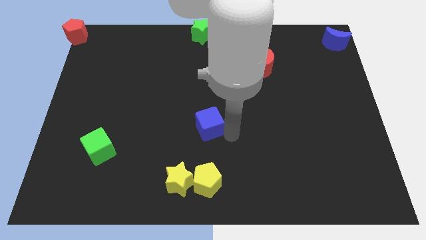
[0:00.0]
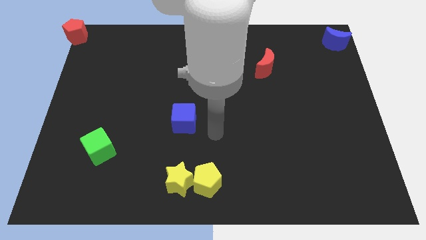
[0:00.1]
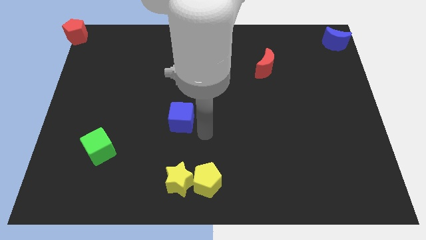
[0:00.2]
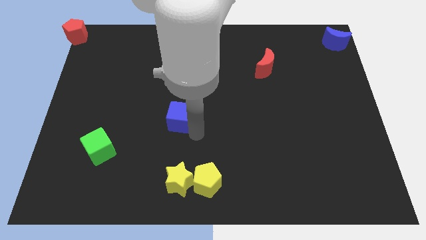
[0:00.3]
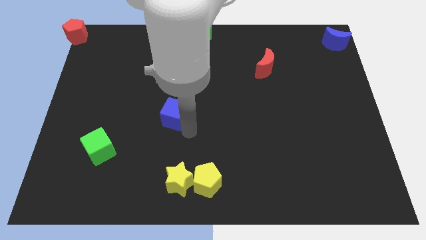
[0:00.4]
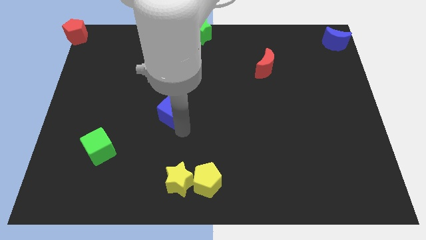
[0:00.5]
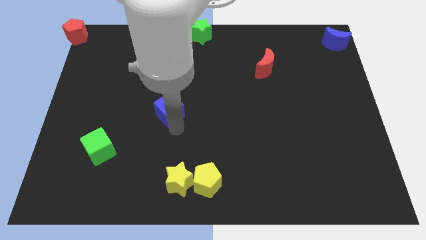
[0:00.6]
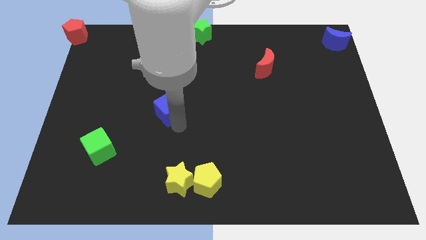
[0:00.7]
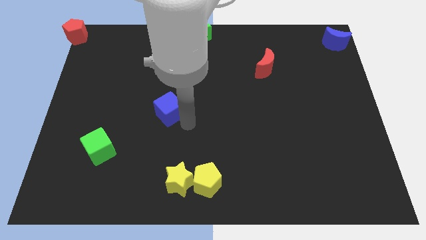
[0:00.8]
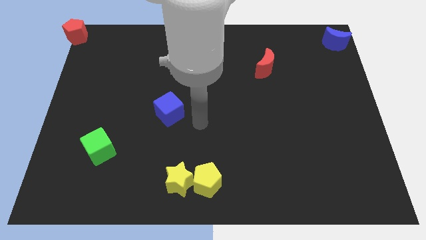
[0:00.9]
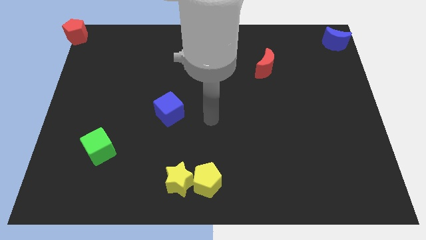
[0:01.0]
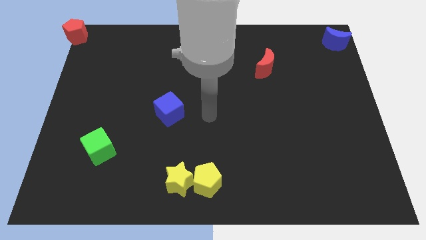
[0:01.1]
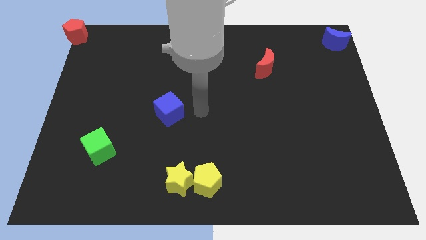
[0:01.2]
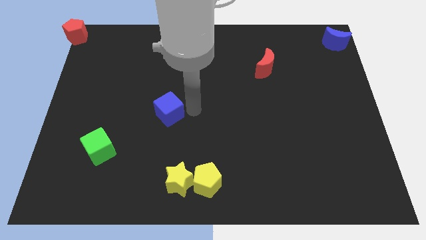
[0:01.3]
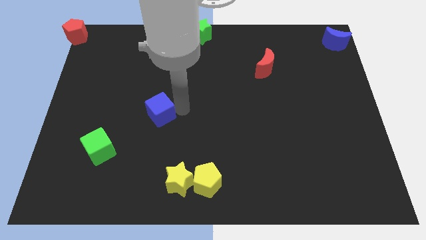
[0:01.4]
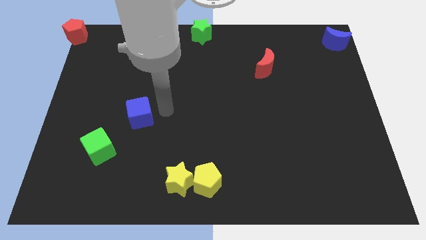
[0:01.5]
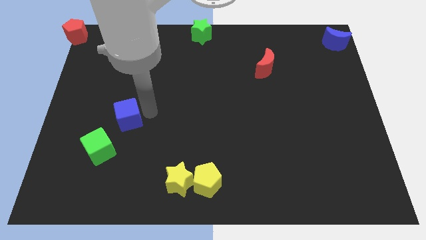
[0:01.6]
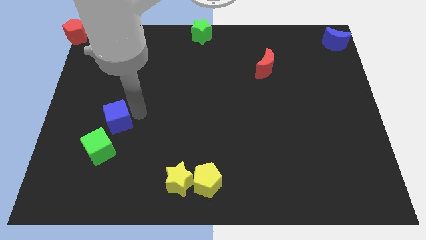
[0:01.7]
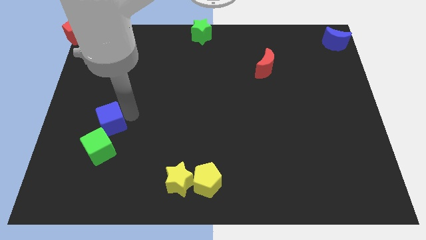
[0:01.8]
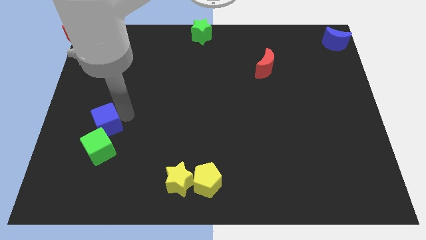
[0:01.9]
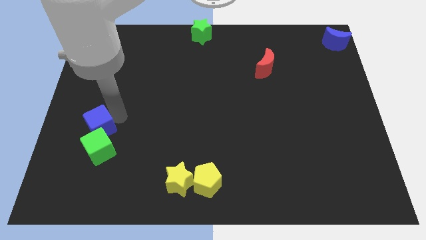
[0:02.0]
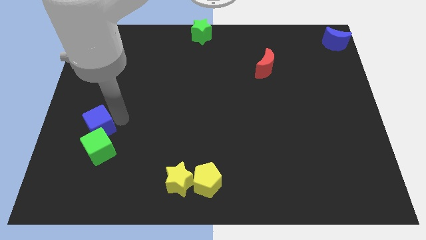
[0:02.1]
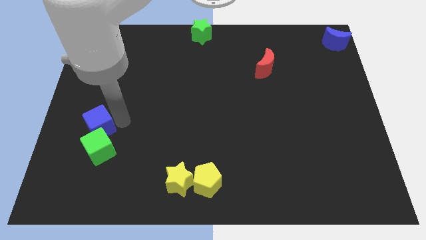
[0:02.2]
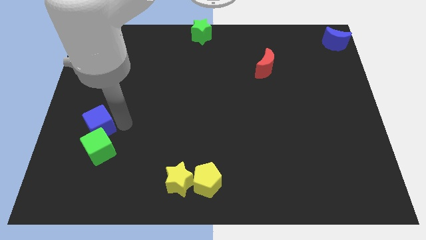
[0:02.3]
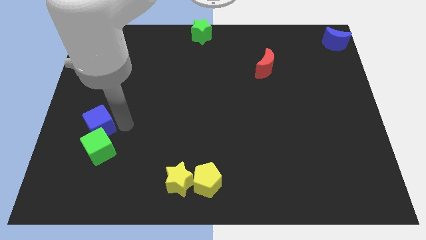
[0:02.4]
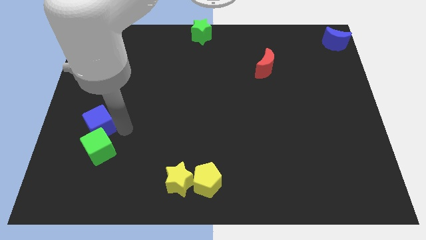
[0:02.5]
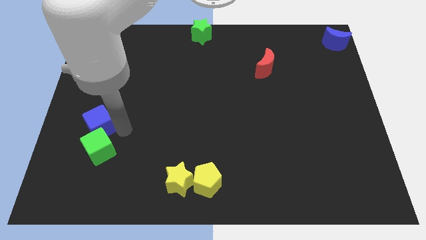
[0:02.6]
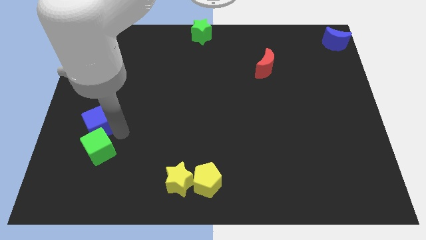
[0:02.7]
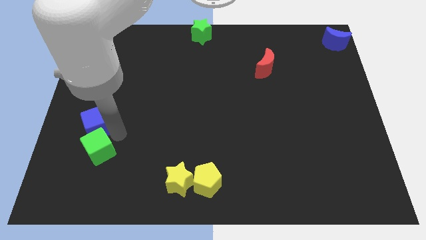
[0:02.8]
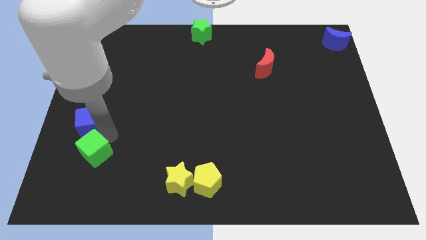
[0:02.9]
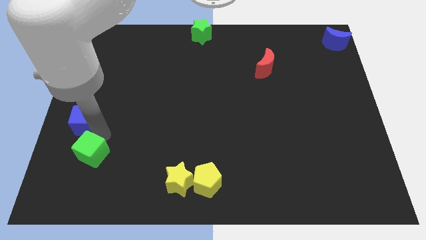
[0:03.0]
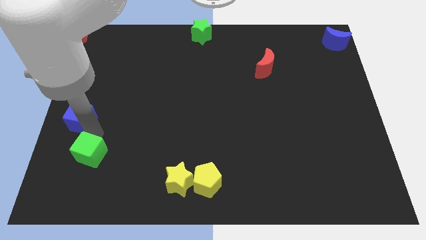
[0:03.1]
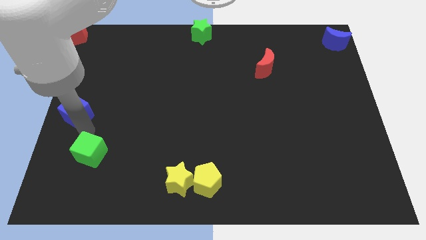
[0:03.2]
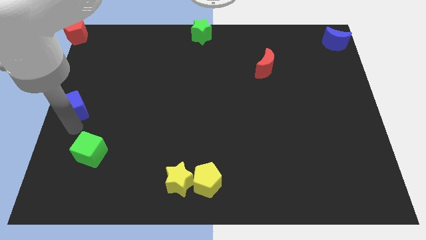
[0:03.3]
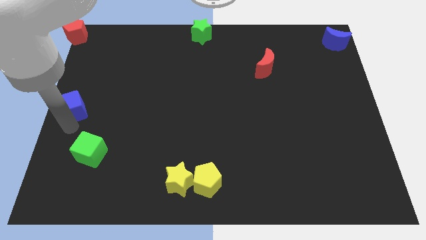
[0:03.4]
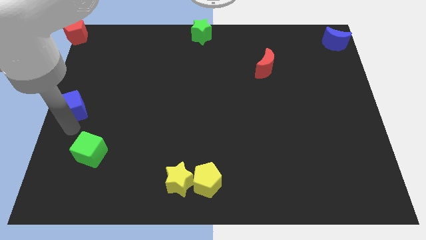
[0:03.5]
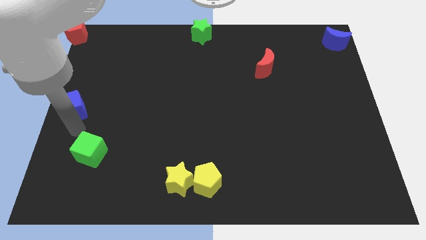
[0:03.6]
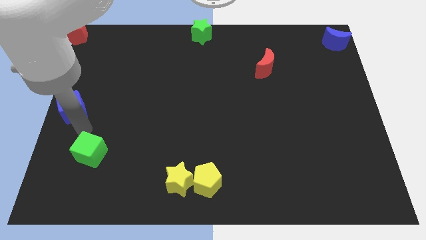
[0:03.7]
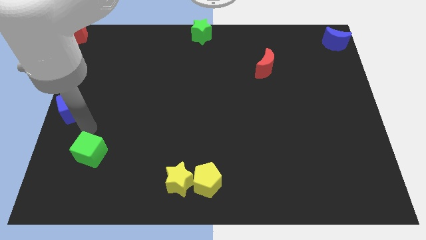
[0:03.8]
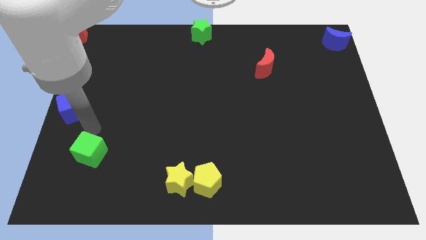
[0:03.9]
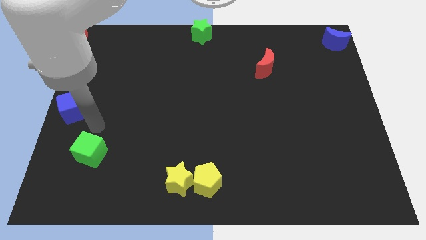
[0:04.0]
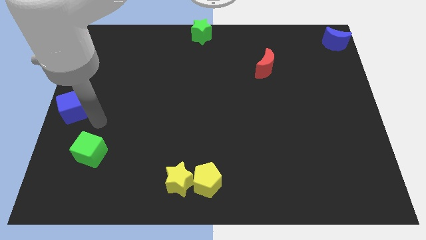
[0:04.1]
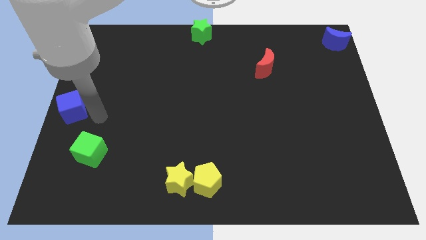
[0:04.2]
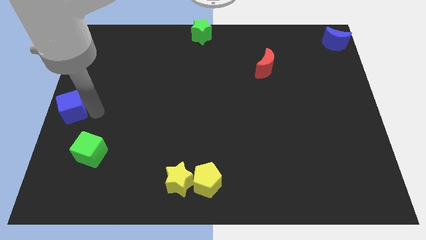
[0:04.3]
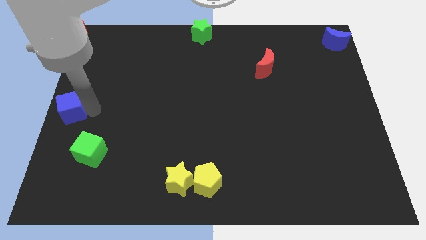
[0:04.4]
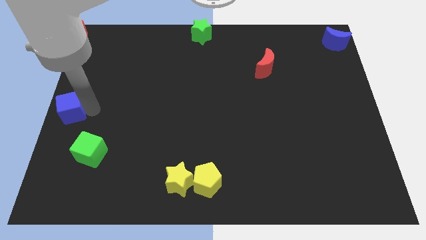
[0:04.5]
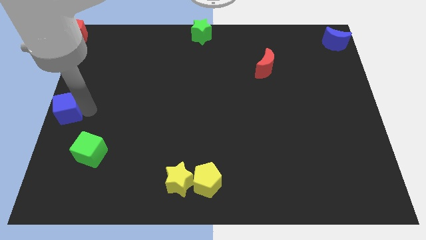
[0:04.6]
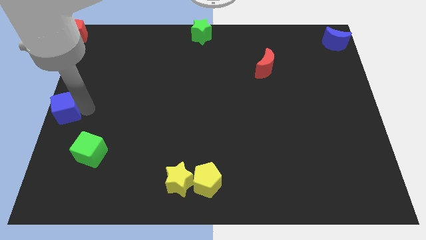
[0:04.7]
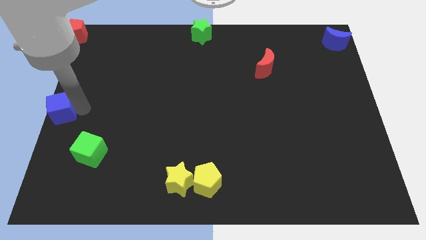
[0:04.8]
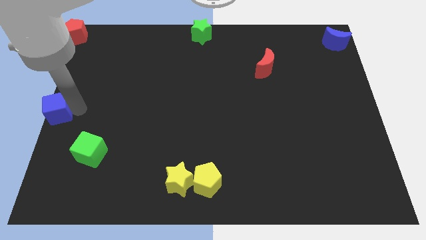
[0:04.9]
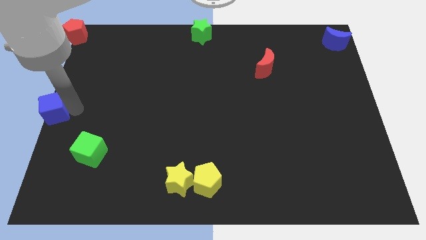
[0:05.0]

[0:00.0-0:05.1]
place the blue cube below the red pentagon

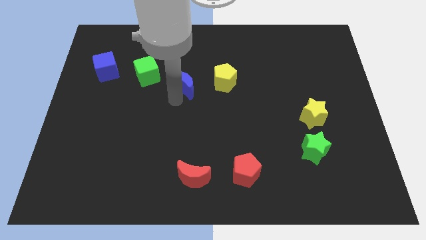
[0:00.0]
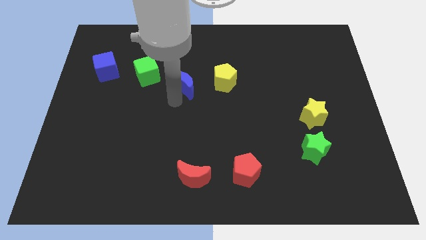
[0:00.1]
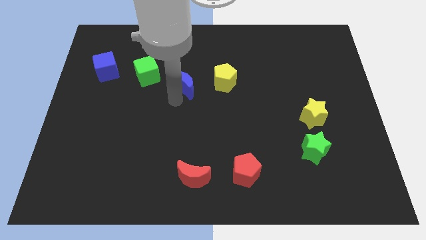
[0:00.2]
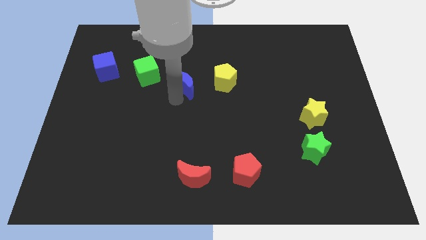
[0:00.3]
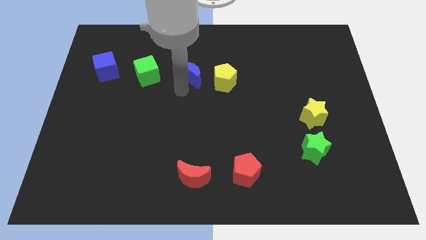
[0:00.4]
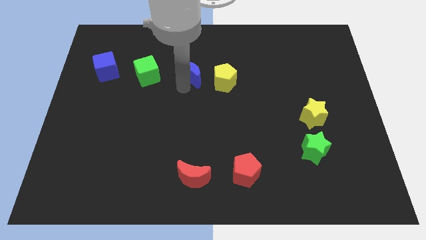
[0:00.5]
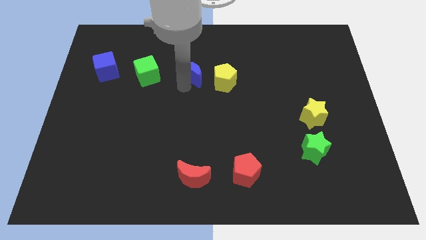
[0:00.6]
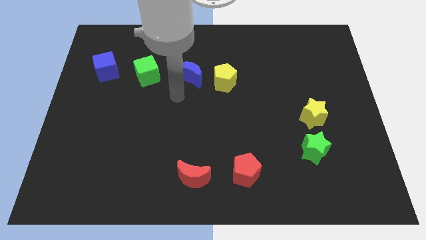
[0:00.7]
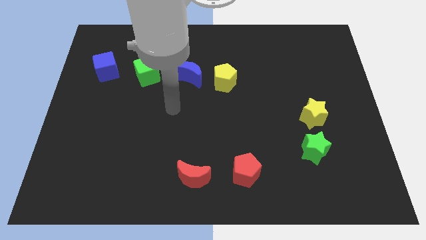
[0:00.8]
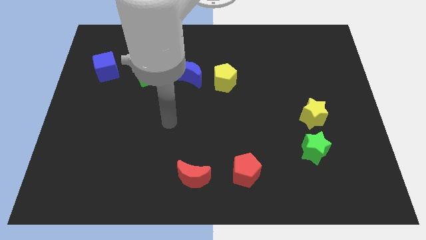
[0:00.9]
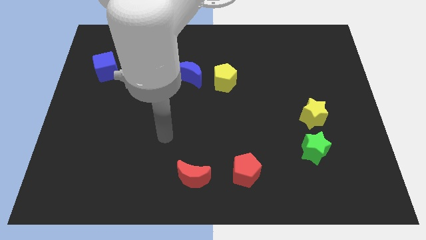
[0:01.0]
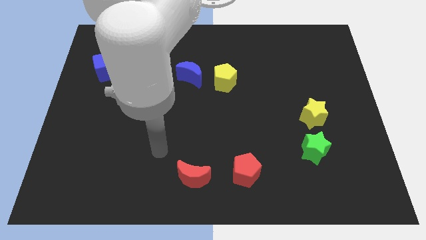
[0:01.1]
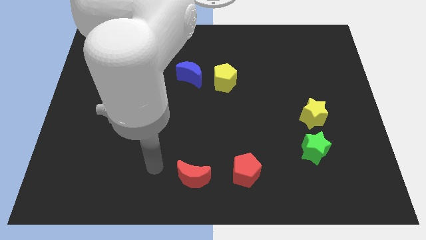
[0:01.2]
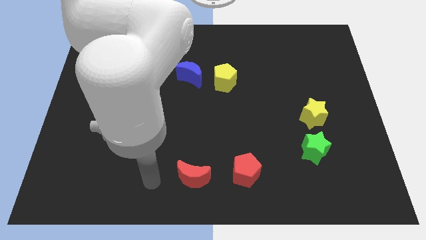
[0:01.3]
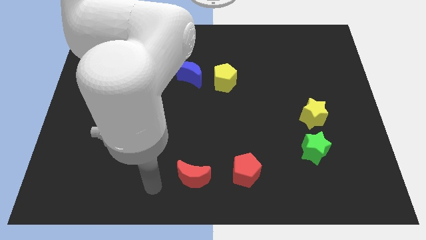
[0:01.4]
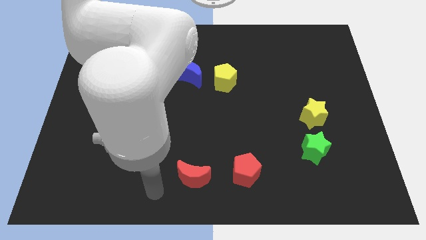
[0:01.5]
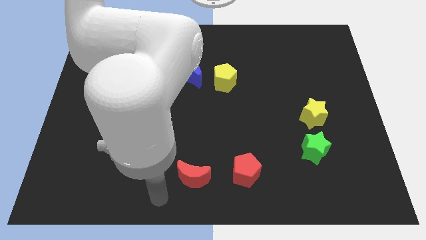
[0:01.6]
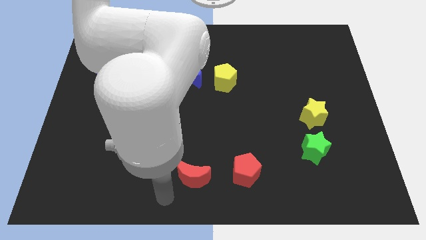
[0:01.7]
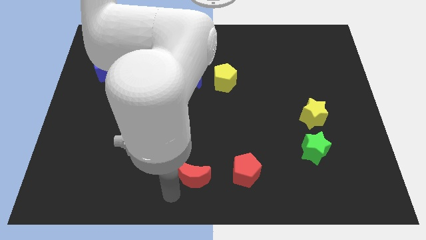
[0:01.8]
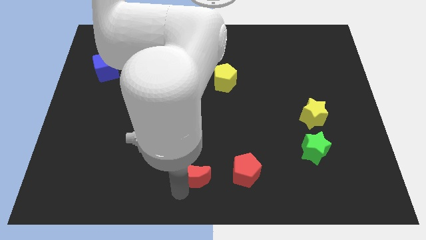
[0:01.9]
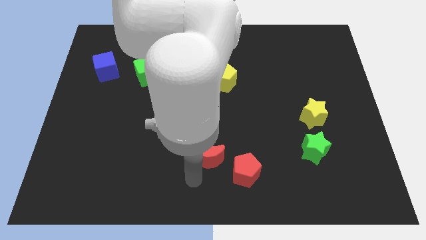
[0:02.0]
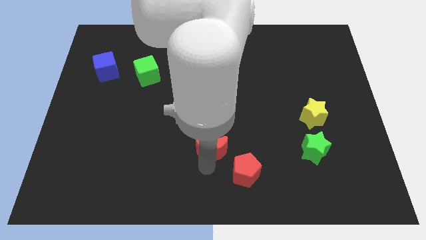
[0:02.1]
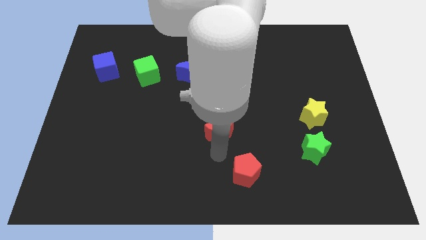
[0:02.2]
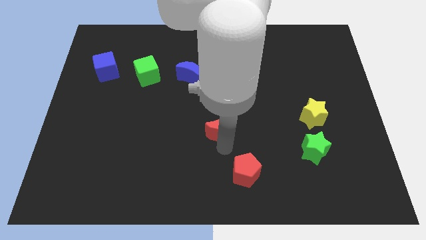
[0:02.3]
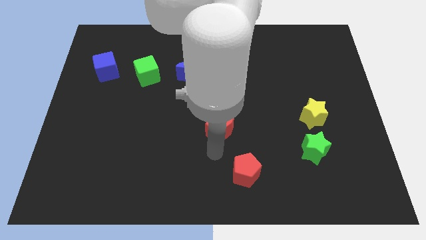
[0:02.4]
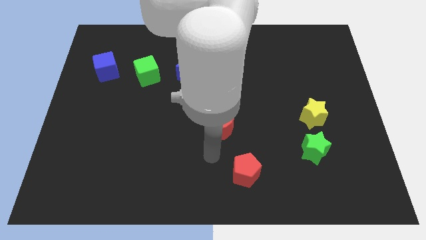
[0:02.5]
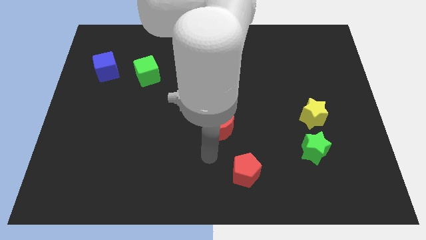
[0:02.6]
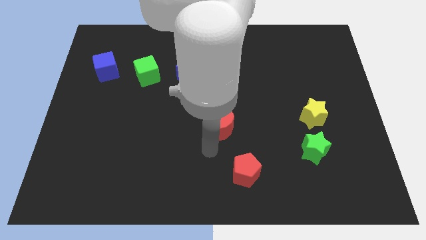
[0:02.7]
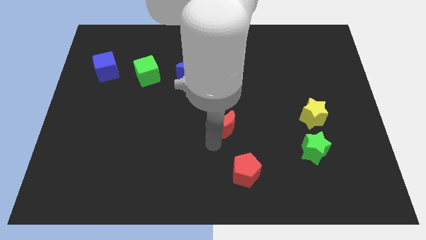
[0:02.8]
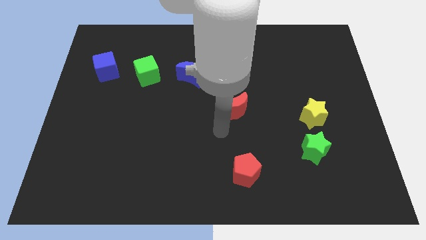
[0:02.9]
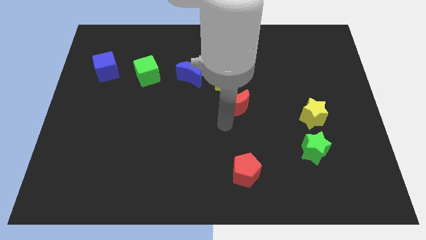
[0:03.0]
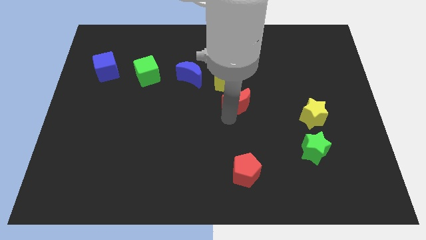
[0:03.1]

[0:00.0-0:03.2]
place red crescent below yellow pentagon

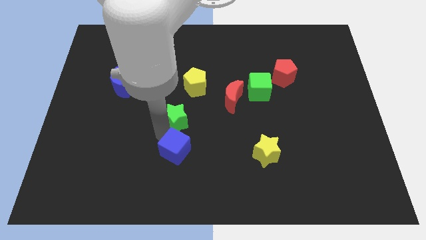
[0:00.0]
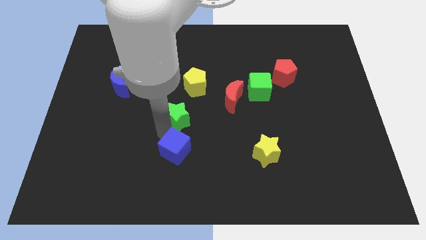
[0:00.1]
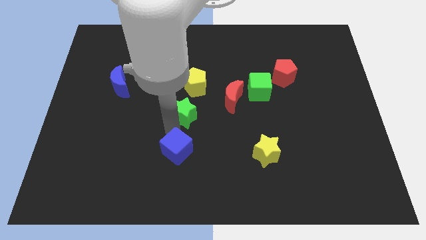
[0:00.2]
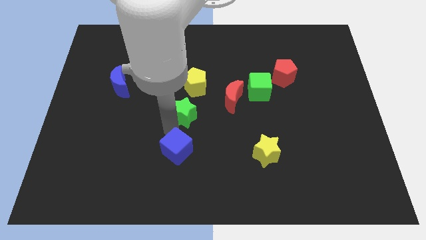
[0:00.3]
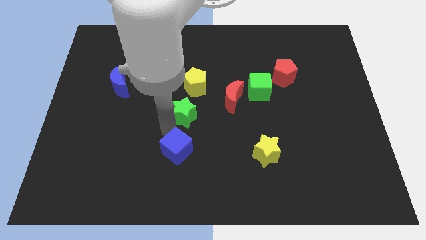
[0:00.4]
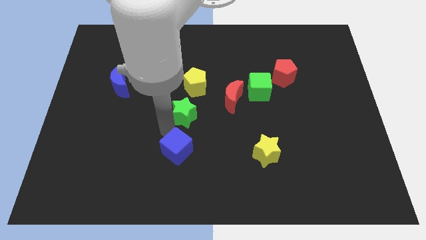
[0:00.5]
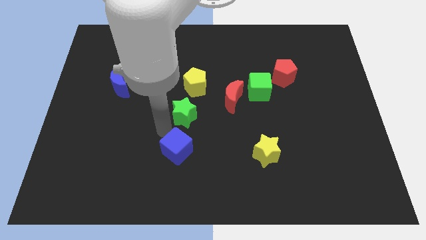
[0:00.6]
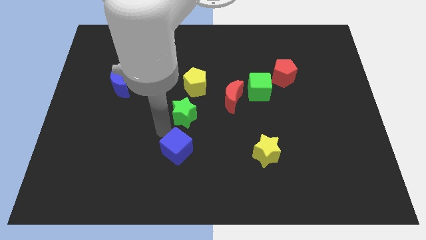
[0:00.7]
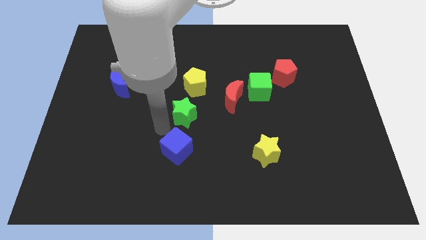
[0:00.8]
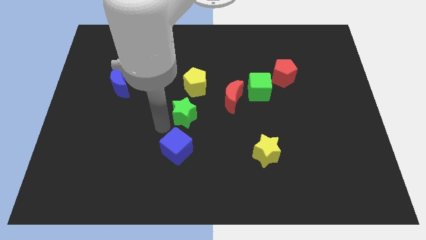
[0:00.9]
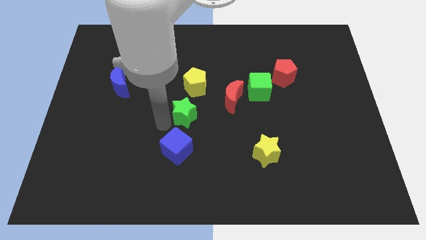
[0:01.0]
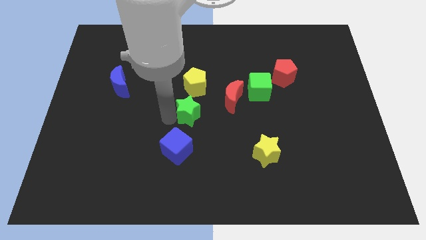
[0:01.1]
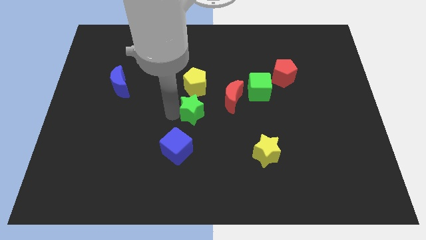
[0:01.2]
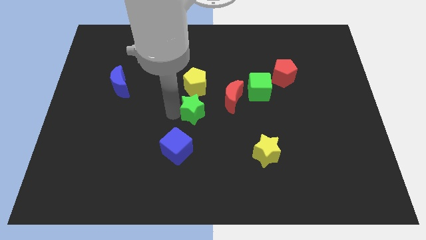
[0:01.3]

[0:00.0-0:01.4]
place green star in between the blue cube and yellow pentagon
